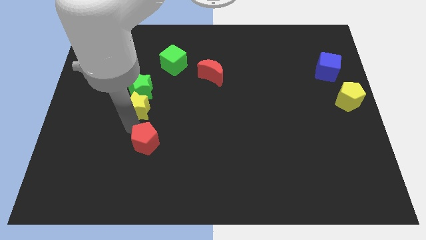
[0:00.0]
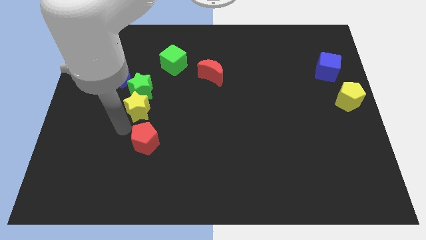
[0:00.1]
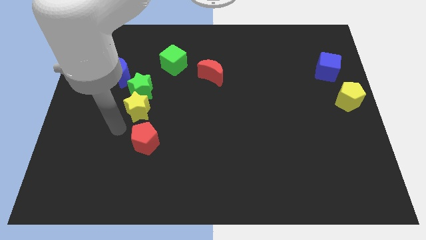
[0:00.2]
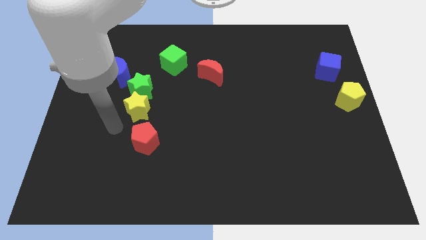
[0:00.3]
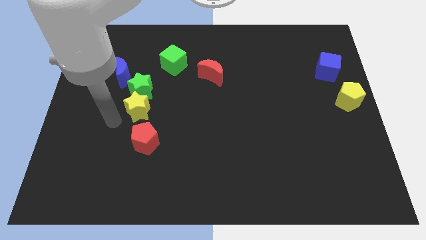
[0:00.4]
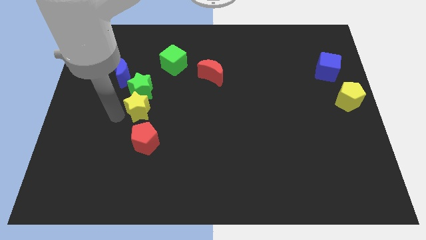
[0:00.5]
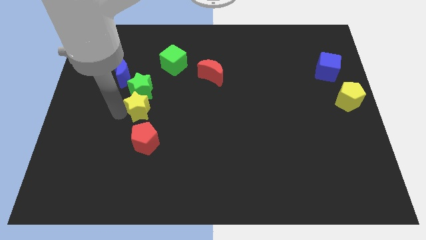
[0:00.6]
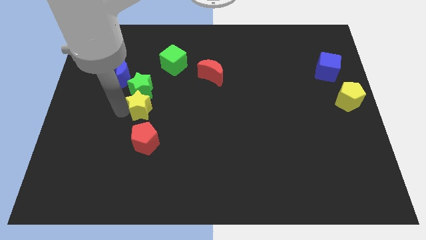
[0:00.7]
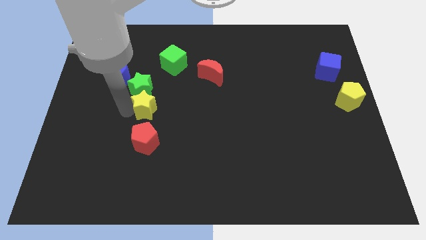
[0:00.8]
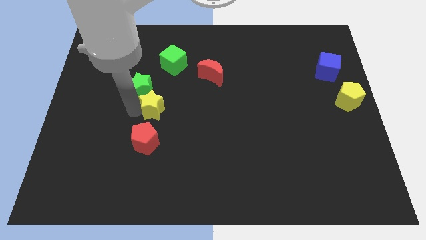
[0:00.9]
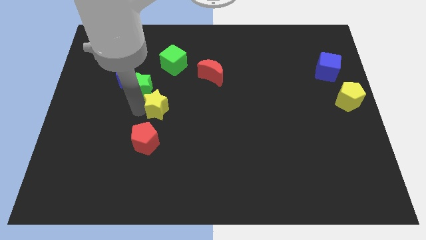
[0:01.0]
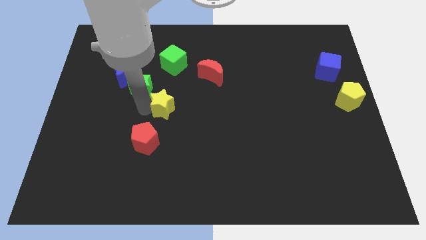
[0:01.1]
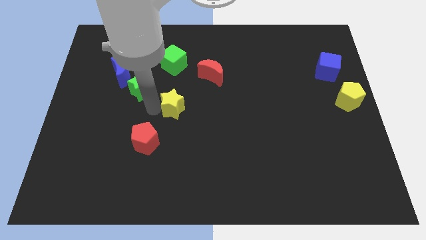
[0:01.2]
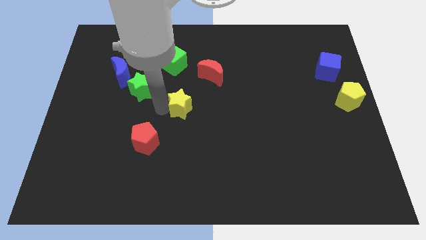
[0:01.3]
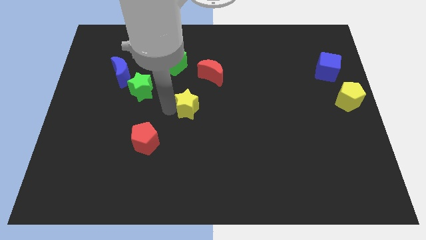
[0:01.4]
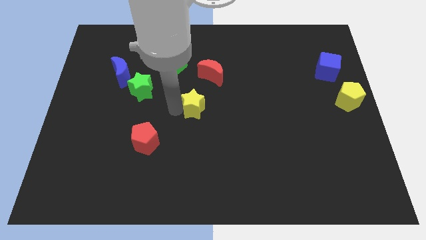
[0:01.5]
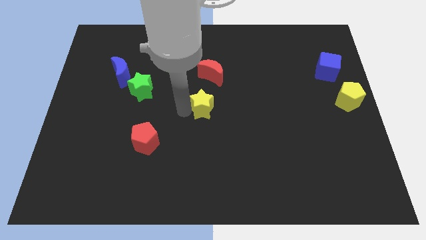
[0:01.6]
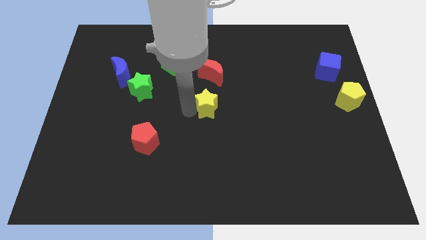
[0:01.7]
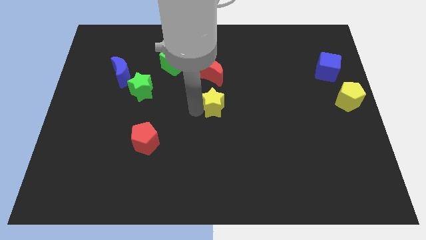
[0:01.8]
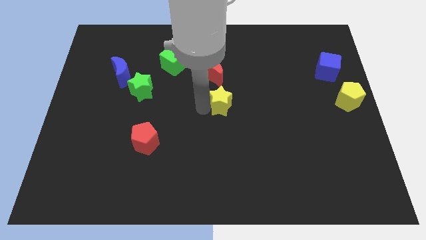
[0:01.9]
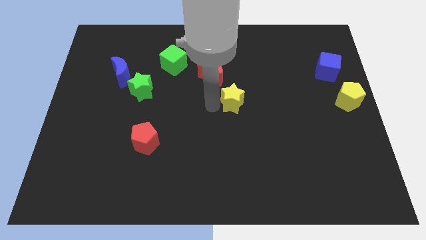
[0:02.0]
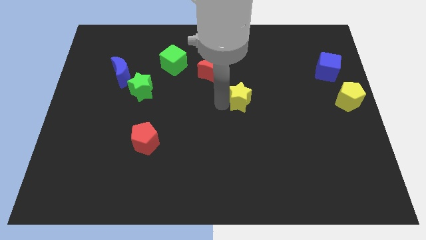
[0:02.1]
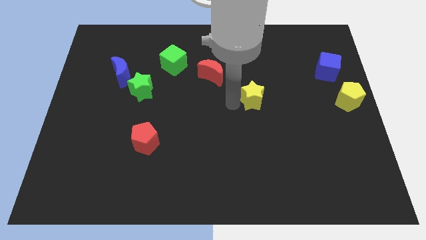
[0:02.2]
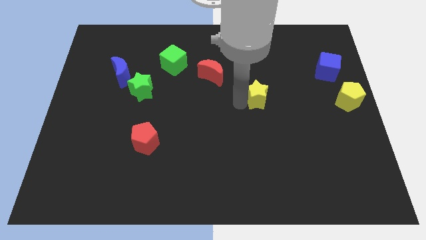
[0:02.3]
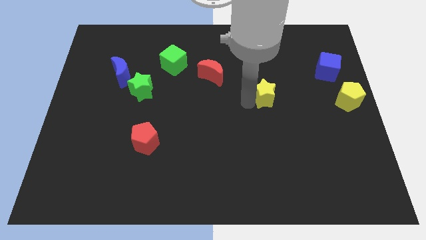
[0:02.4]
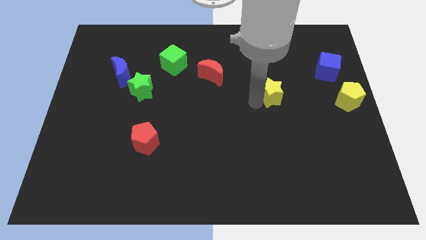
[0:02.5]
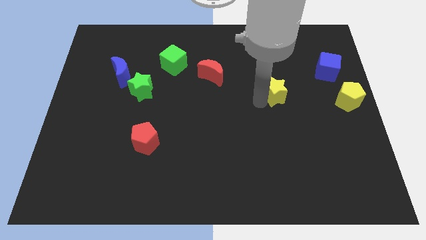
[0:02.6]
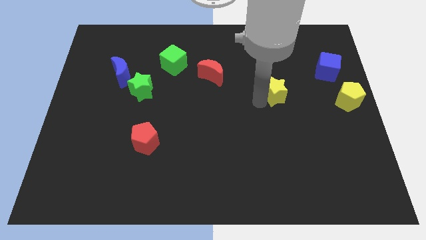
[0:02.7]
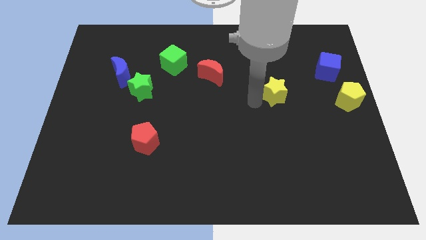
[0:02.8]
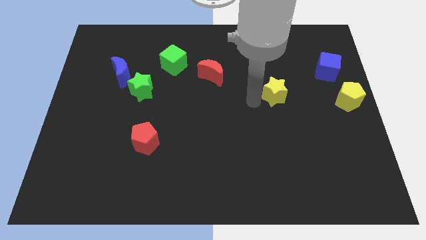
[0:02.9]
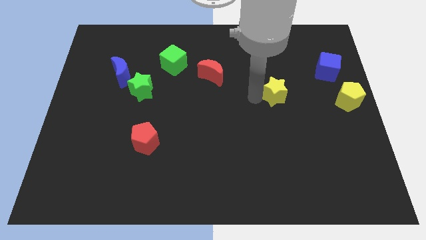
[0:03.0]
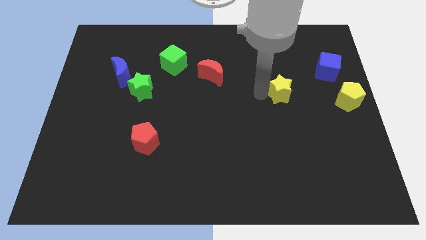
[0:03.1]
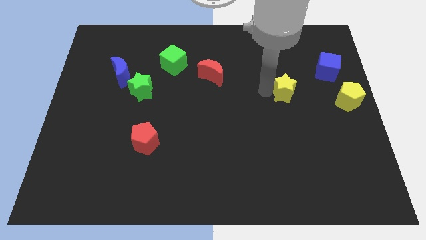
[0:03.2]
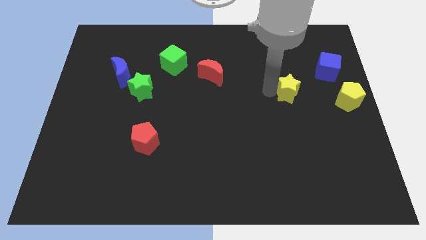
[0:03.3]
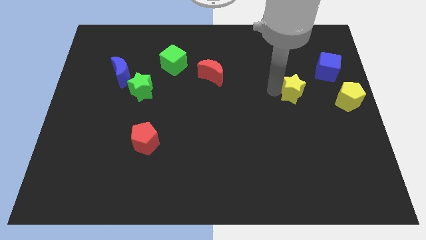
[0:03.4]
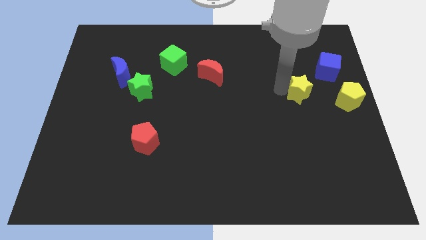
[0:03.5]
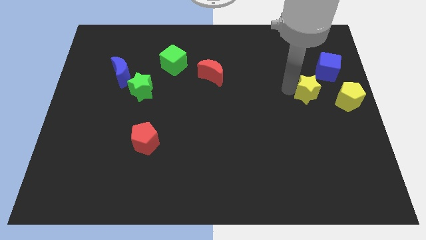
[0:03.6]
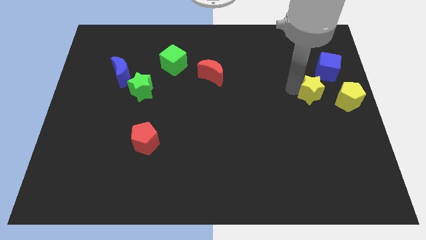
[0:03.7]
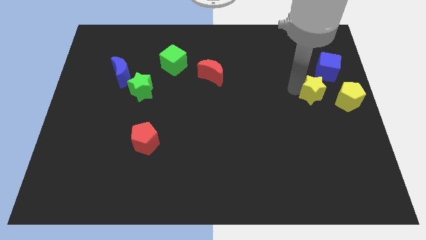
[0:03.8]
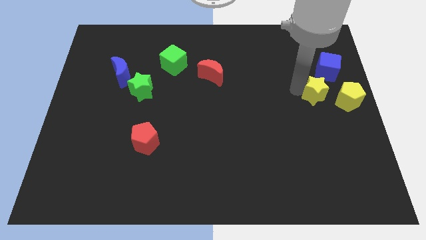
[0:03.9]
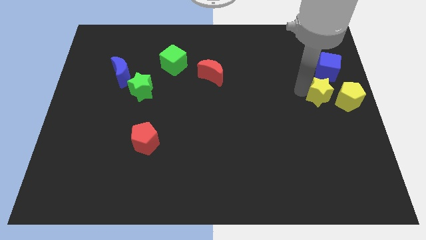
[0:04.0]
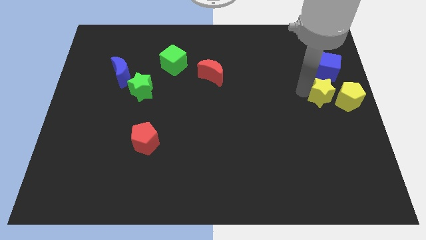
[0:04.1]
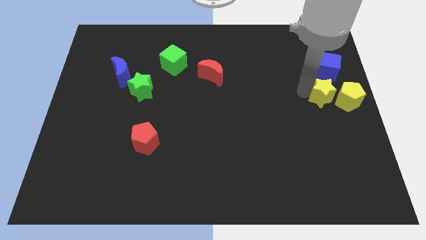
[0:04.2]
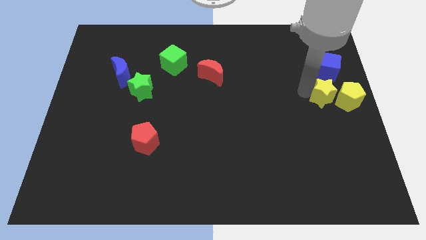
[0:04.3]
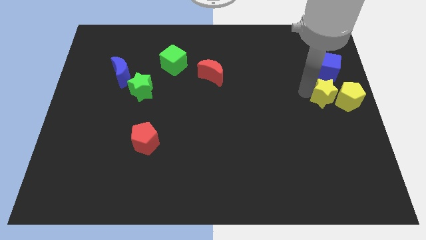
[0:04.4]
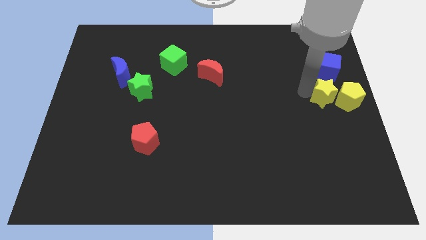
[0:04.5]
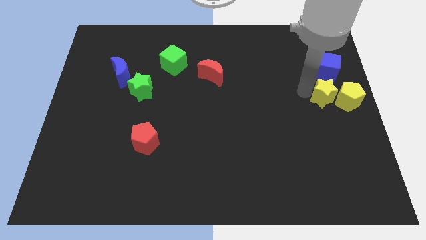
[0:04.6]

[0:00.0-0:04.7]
place the yellow star to the left of the yellow pentagon

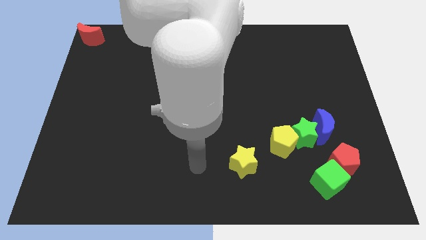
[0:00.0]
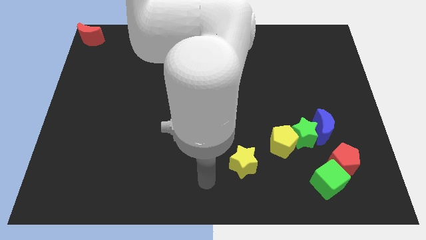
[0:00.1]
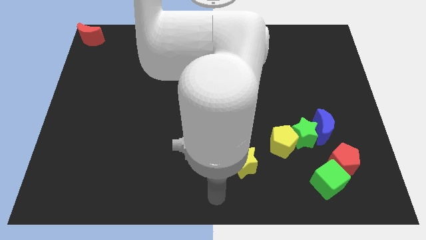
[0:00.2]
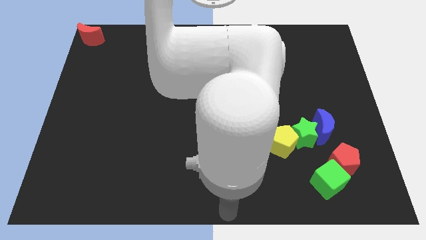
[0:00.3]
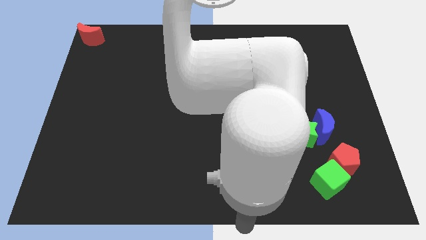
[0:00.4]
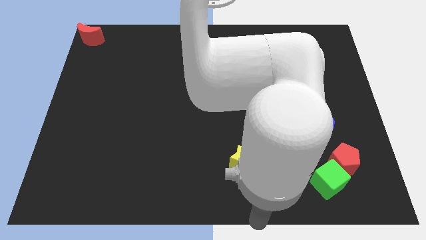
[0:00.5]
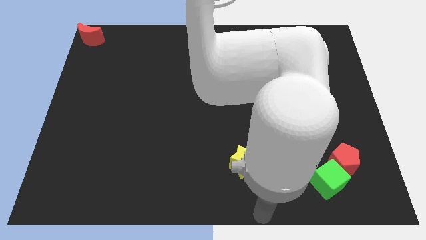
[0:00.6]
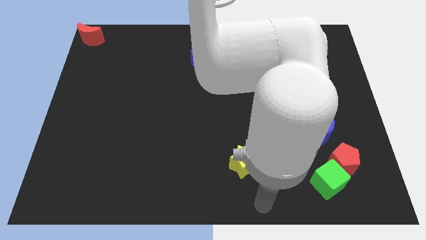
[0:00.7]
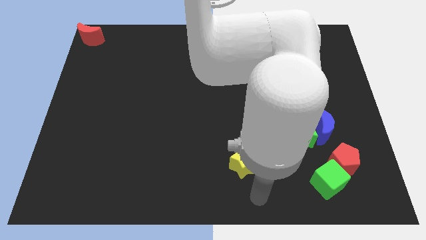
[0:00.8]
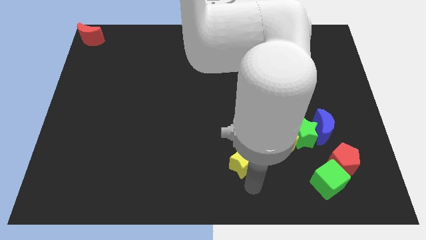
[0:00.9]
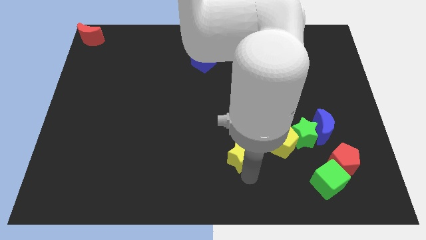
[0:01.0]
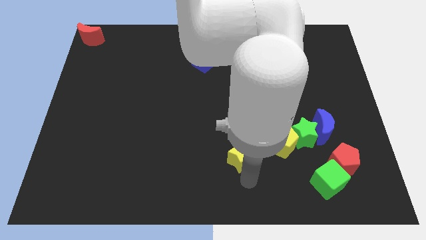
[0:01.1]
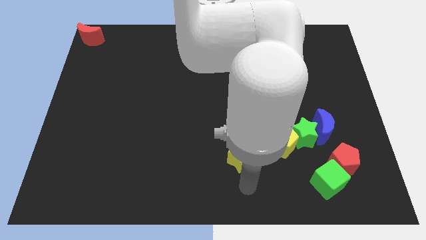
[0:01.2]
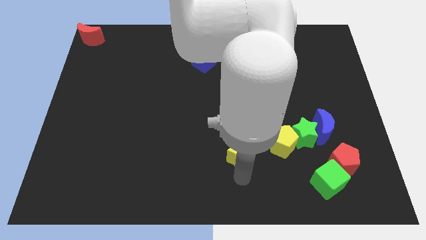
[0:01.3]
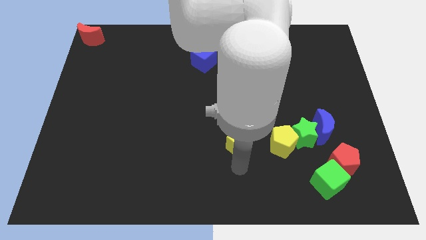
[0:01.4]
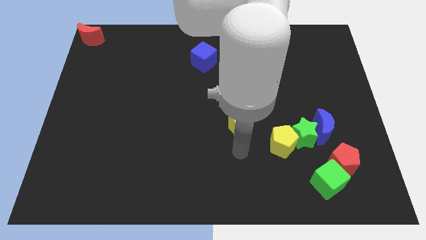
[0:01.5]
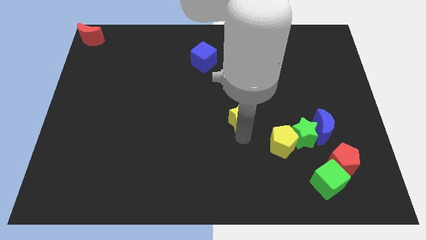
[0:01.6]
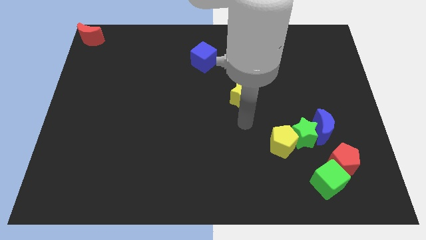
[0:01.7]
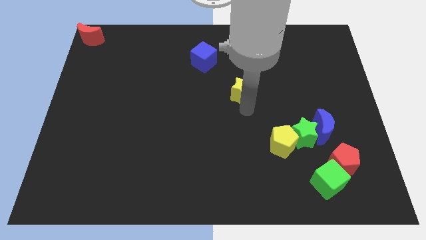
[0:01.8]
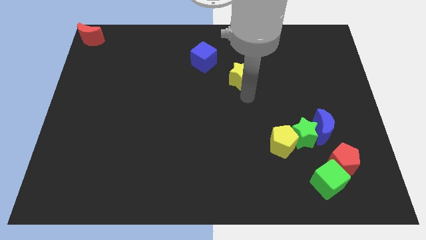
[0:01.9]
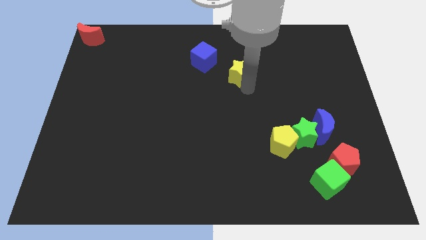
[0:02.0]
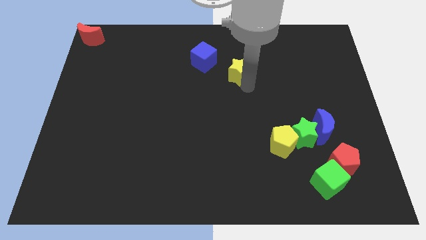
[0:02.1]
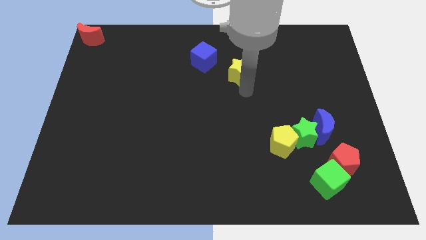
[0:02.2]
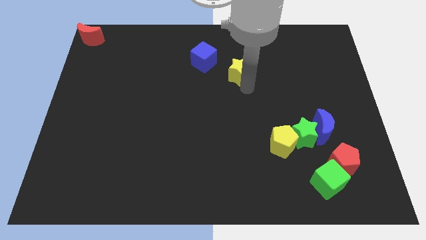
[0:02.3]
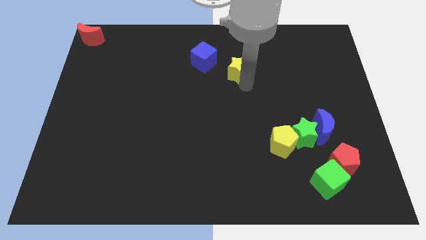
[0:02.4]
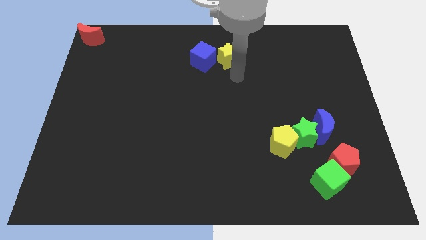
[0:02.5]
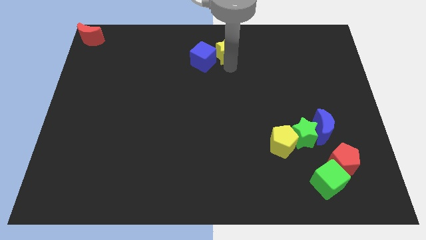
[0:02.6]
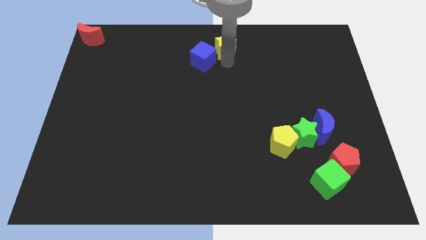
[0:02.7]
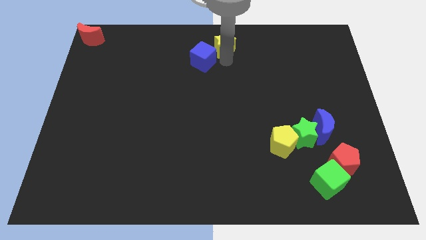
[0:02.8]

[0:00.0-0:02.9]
move the yellow star to the top center of the board

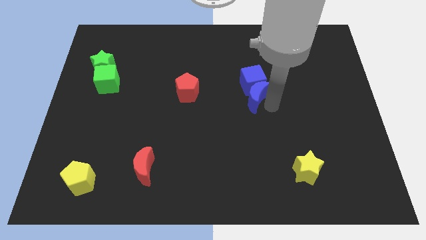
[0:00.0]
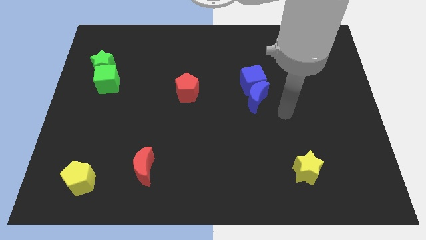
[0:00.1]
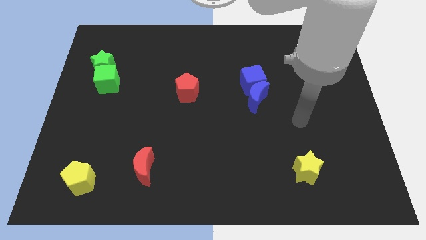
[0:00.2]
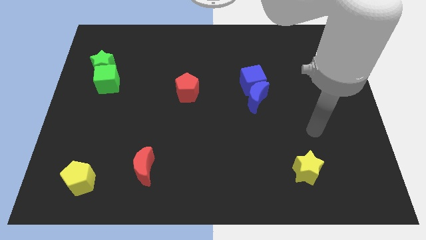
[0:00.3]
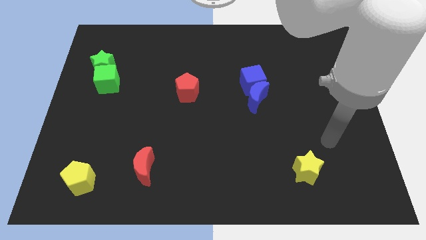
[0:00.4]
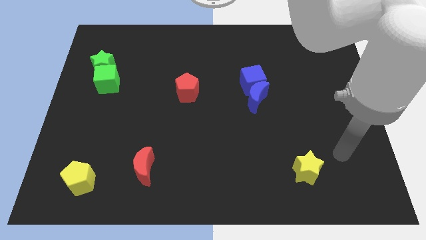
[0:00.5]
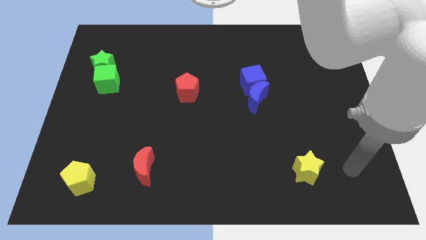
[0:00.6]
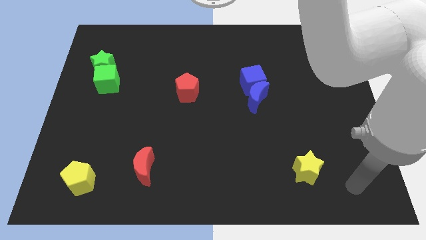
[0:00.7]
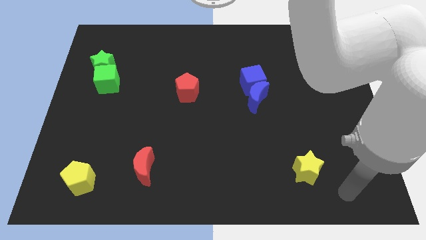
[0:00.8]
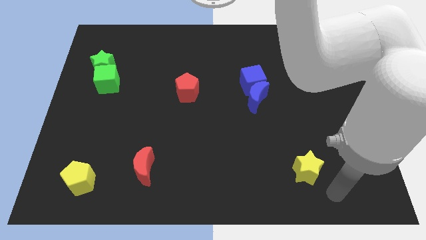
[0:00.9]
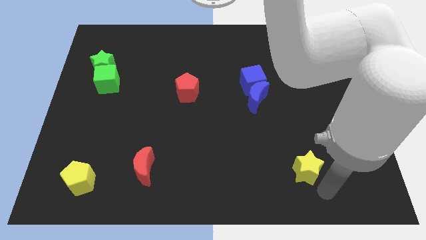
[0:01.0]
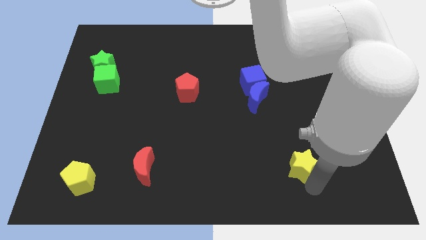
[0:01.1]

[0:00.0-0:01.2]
move your arm to the bottom of the yellow star

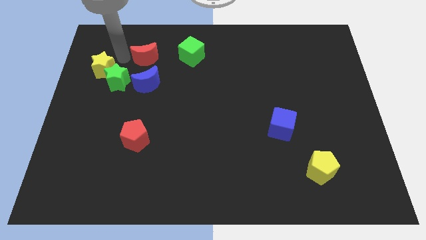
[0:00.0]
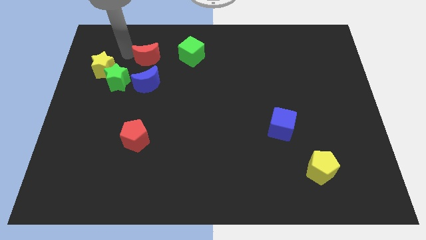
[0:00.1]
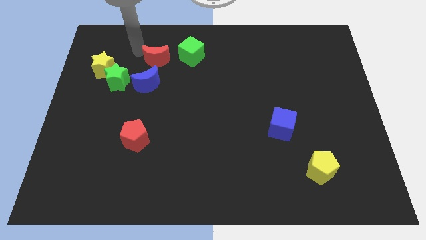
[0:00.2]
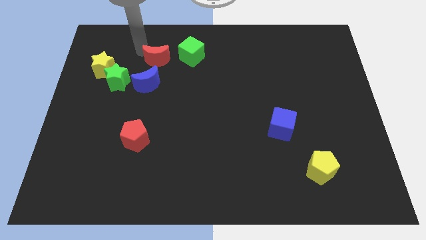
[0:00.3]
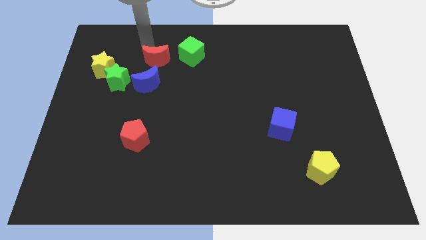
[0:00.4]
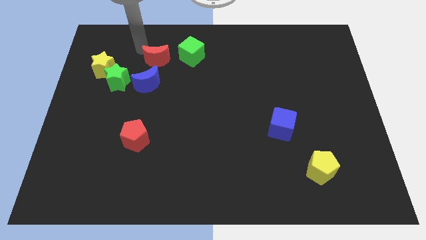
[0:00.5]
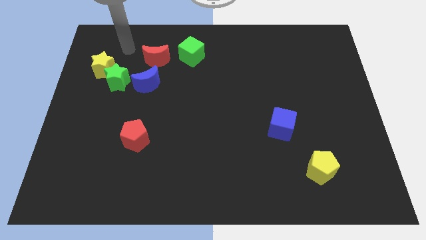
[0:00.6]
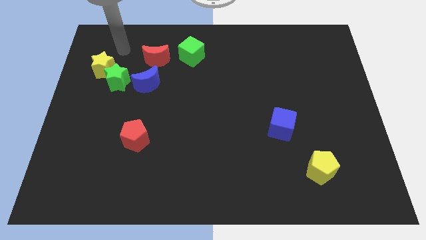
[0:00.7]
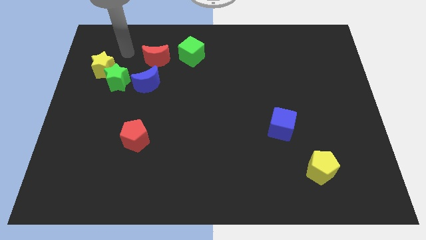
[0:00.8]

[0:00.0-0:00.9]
place the red crescent left to the green cube
